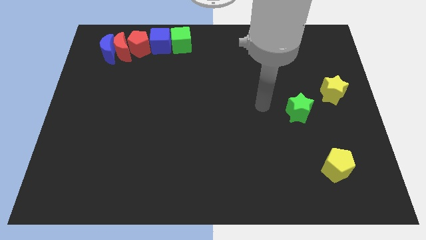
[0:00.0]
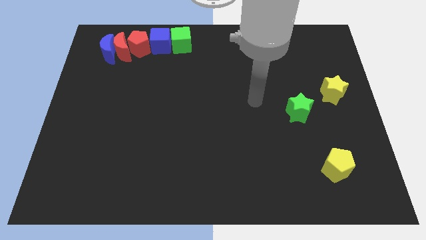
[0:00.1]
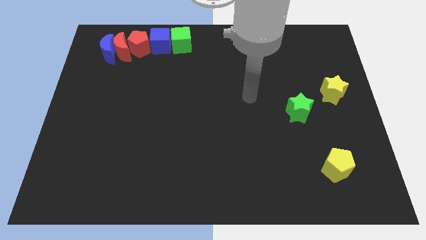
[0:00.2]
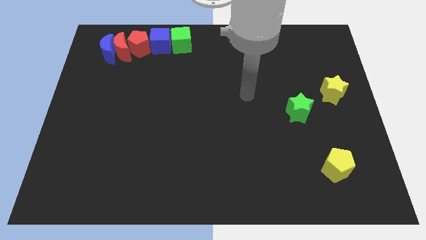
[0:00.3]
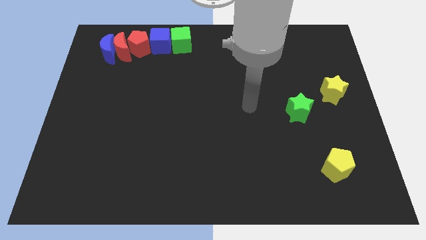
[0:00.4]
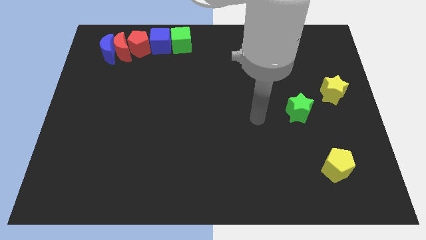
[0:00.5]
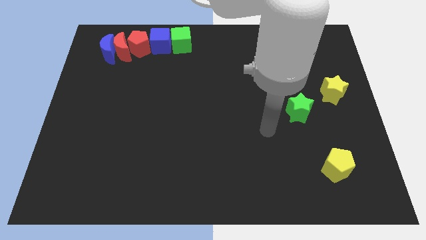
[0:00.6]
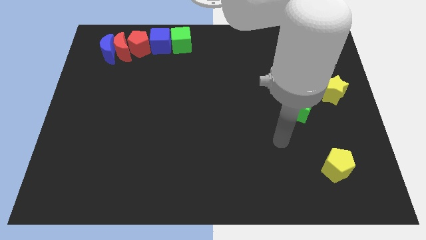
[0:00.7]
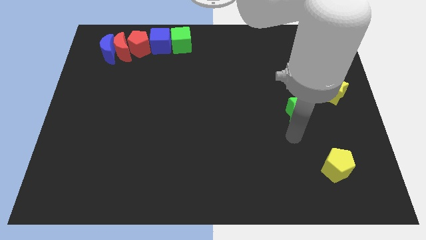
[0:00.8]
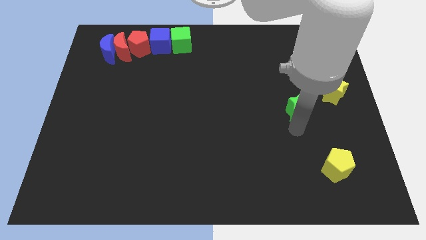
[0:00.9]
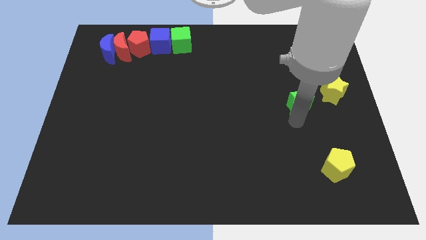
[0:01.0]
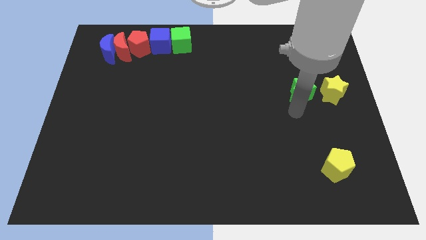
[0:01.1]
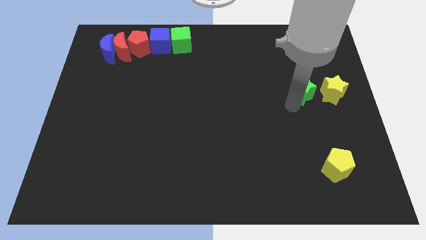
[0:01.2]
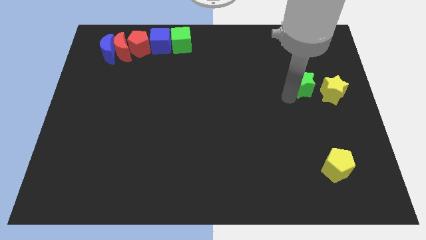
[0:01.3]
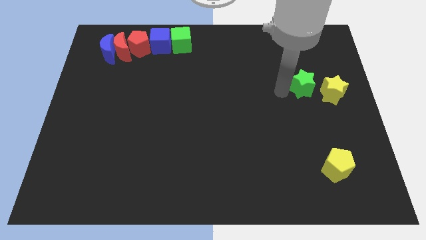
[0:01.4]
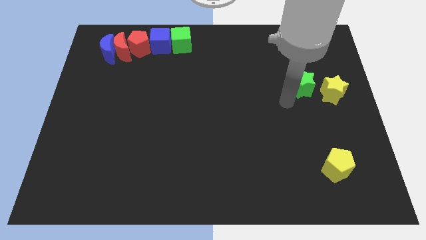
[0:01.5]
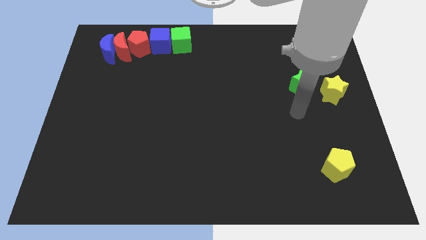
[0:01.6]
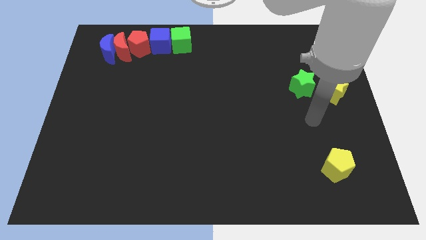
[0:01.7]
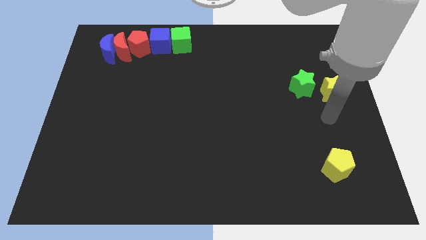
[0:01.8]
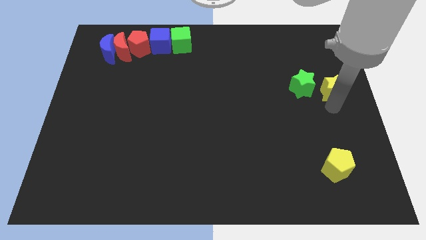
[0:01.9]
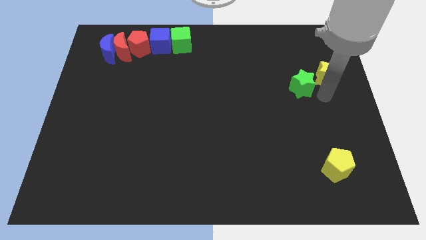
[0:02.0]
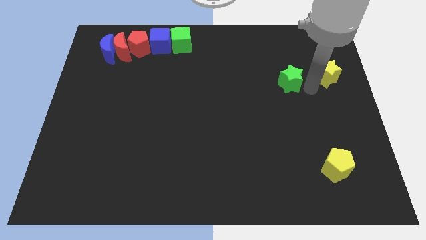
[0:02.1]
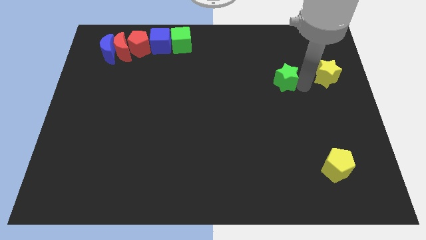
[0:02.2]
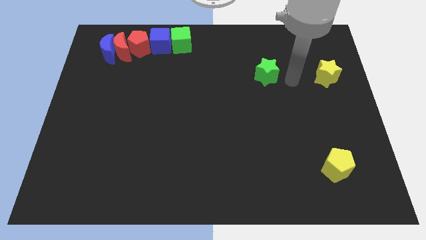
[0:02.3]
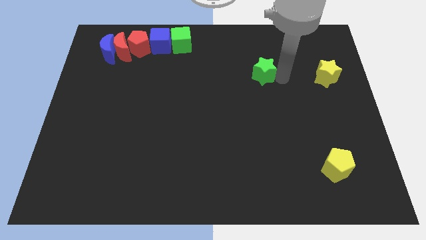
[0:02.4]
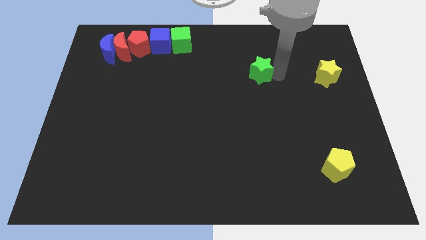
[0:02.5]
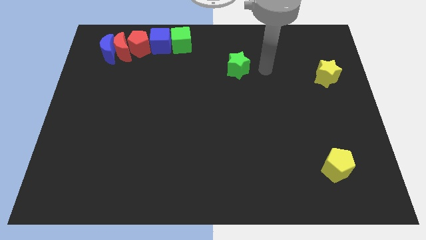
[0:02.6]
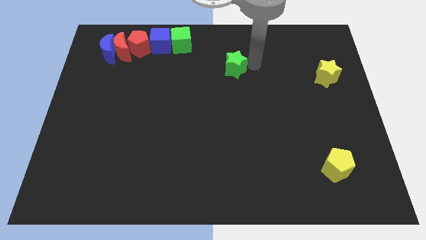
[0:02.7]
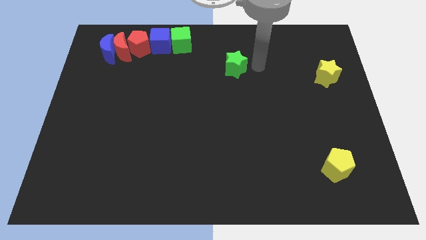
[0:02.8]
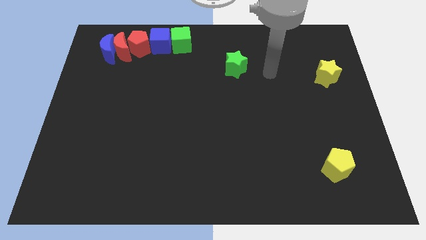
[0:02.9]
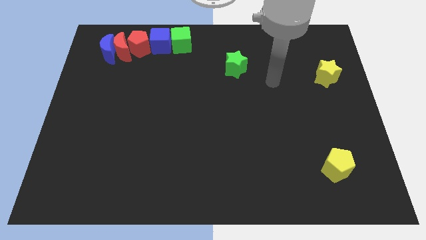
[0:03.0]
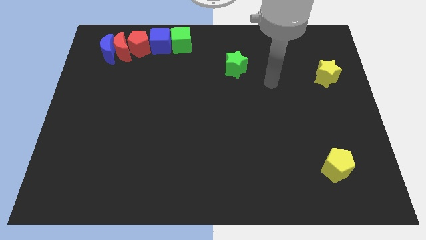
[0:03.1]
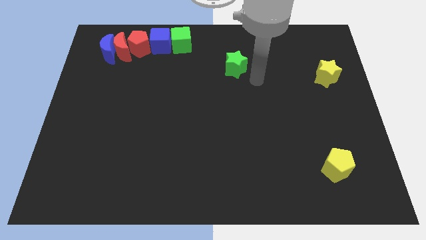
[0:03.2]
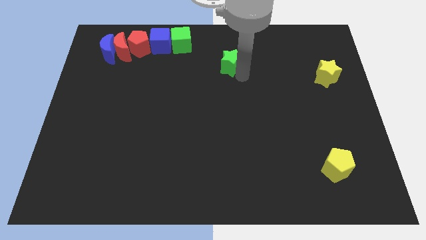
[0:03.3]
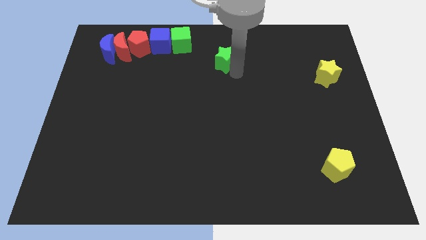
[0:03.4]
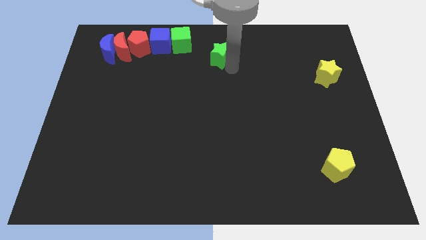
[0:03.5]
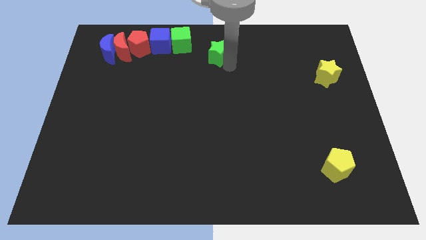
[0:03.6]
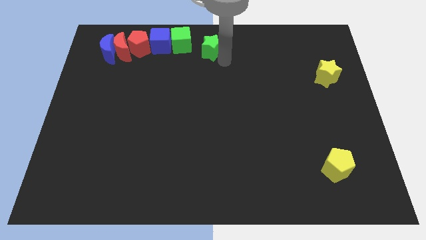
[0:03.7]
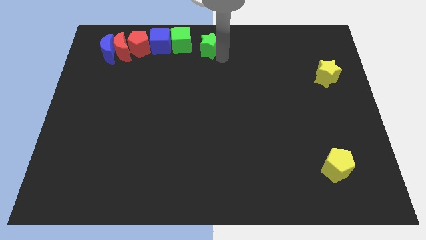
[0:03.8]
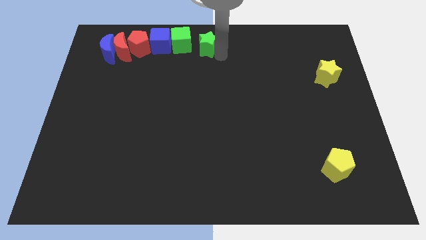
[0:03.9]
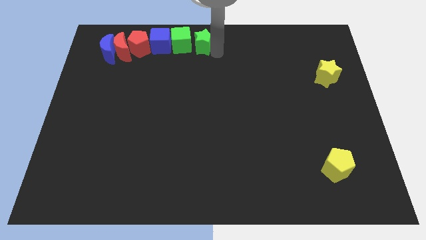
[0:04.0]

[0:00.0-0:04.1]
add green star into green cube

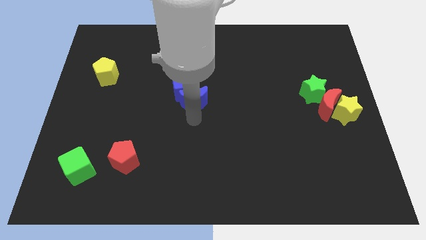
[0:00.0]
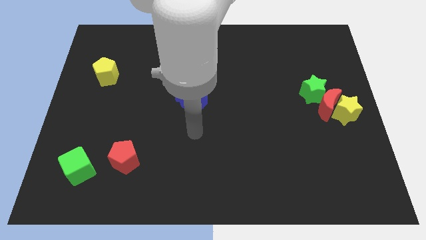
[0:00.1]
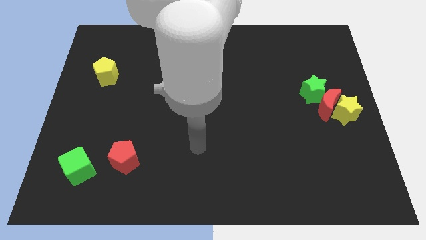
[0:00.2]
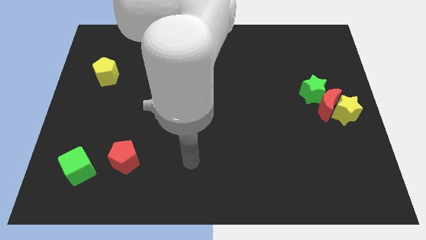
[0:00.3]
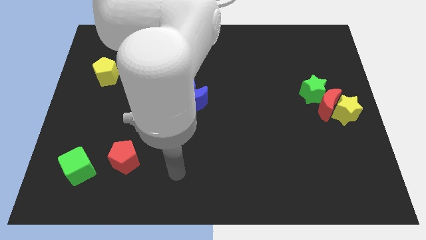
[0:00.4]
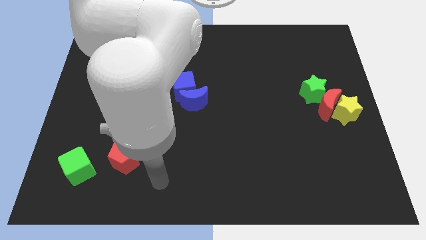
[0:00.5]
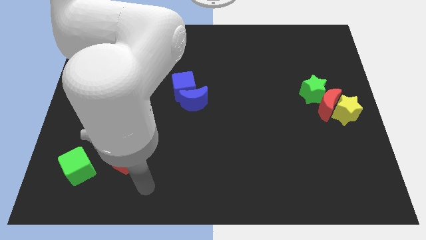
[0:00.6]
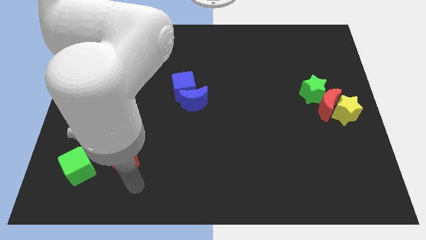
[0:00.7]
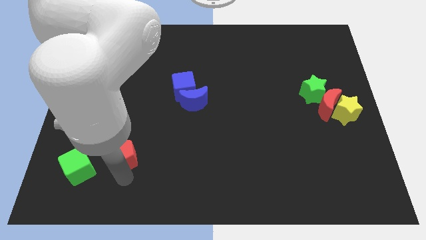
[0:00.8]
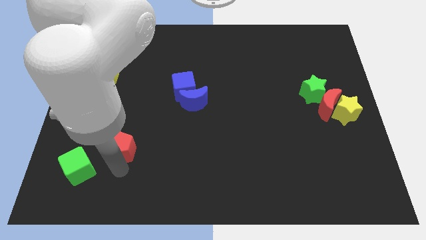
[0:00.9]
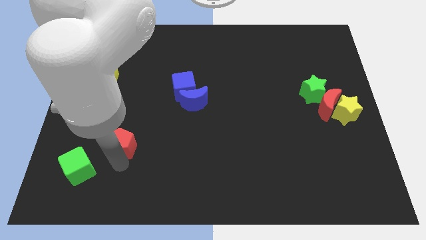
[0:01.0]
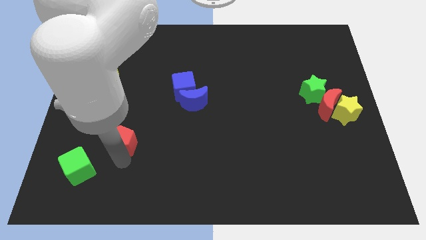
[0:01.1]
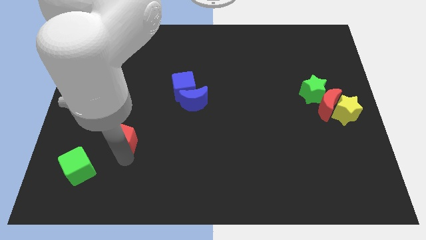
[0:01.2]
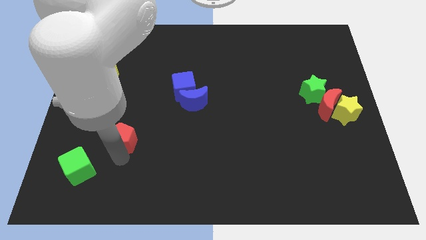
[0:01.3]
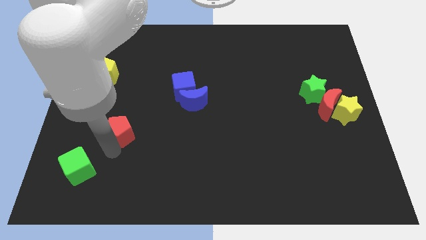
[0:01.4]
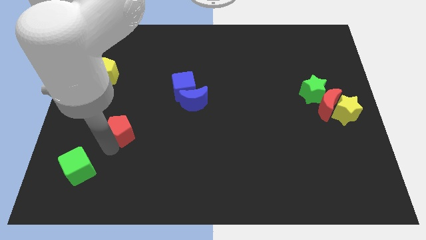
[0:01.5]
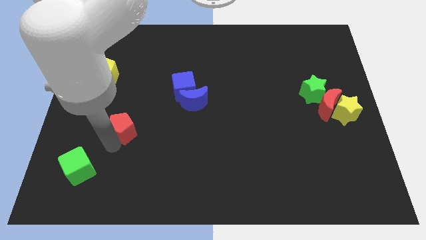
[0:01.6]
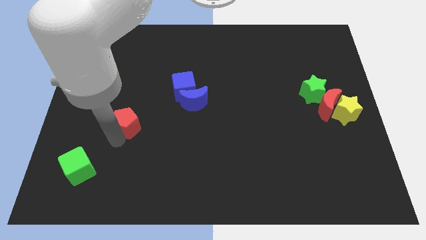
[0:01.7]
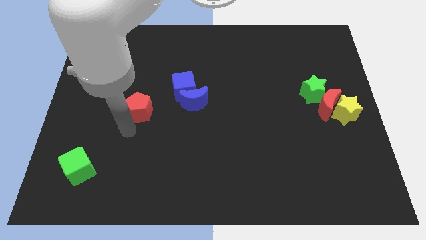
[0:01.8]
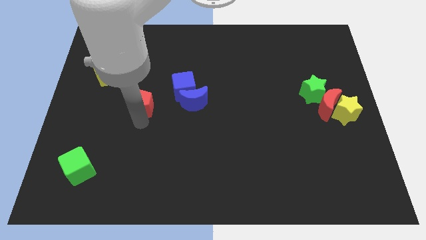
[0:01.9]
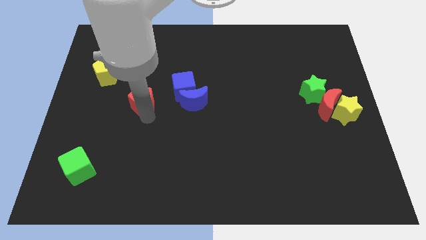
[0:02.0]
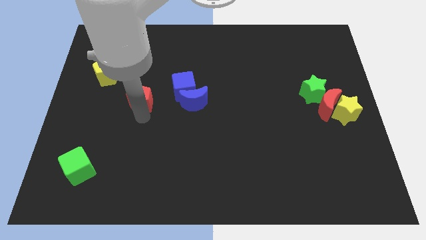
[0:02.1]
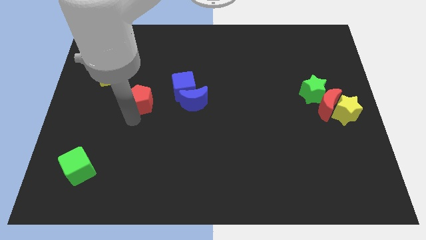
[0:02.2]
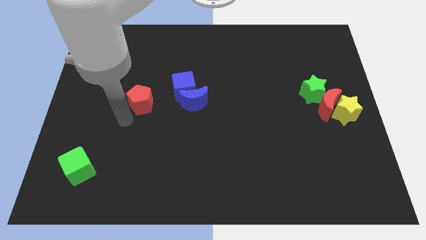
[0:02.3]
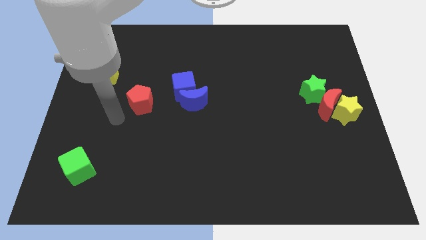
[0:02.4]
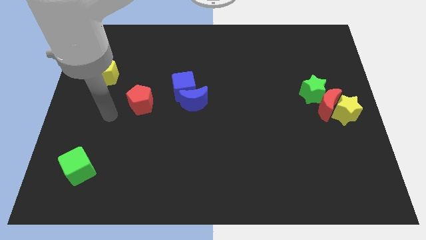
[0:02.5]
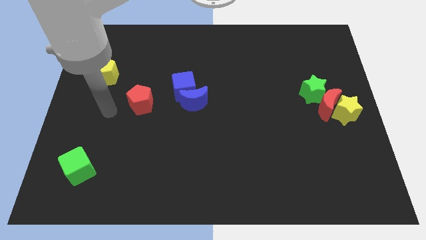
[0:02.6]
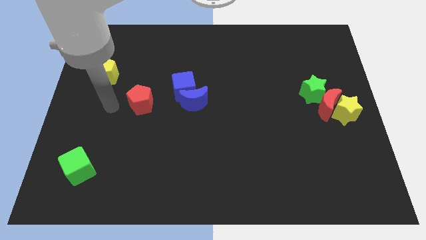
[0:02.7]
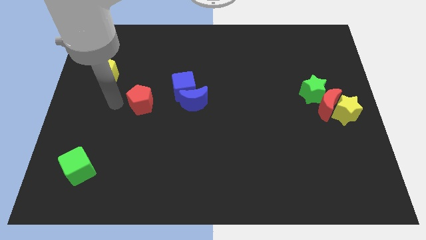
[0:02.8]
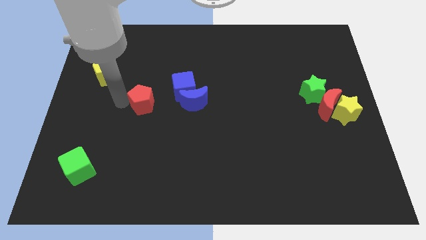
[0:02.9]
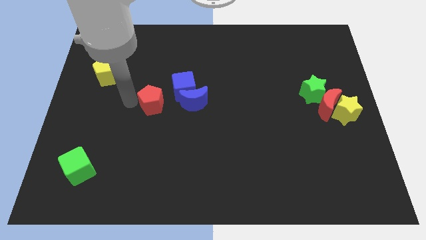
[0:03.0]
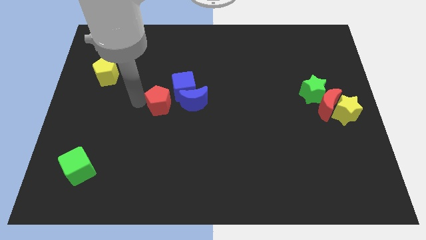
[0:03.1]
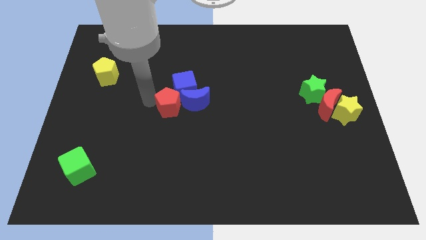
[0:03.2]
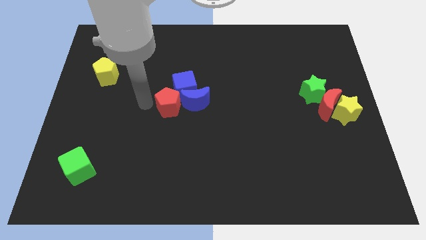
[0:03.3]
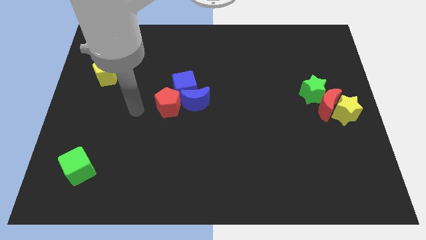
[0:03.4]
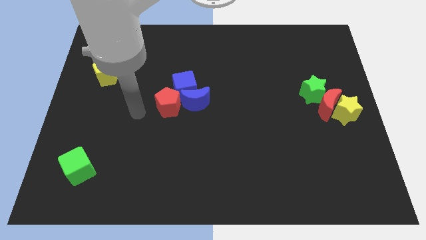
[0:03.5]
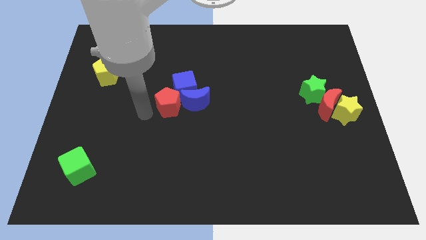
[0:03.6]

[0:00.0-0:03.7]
slide the red pentagon into the left side of the blue blocks

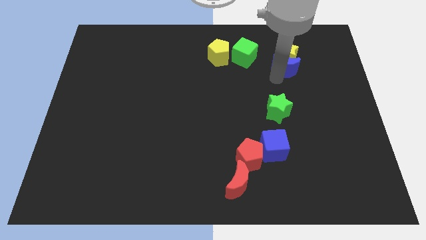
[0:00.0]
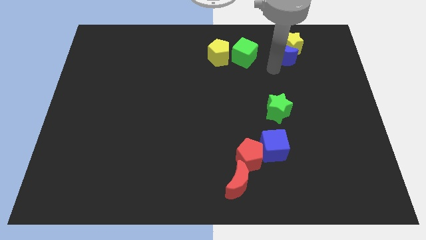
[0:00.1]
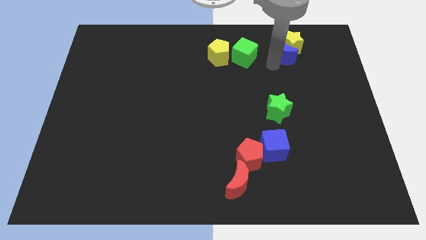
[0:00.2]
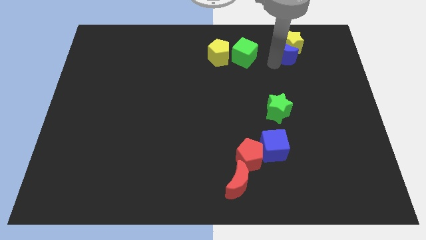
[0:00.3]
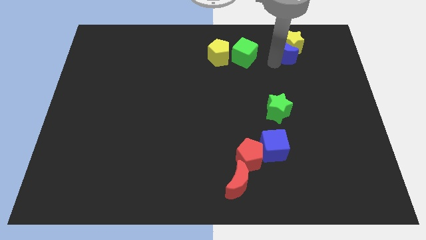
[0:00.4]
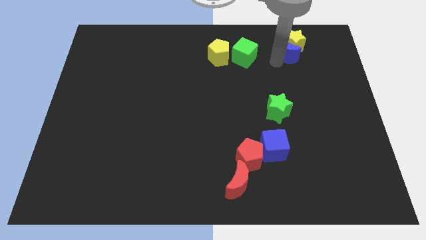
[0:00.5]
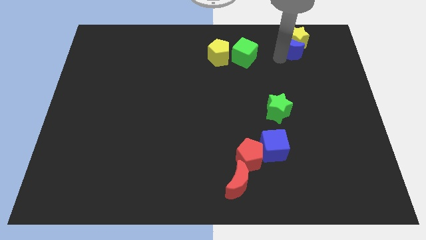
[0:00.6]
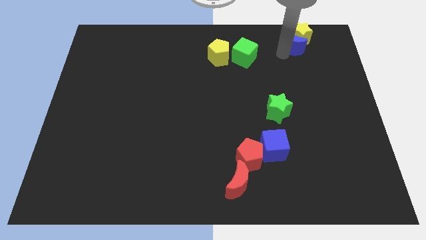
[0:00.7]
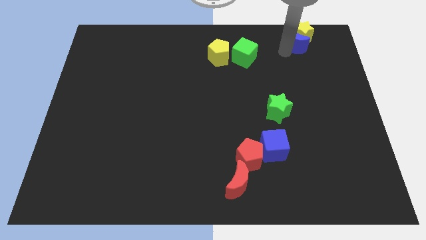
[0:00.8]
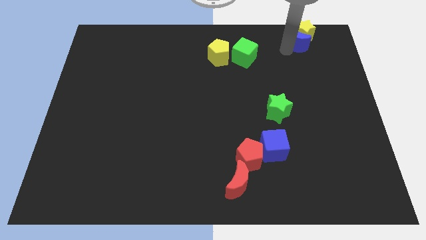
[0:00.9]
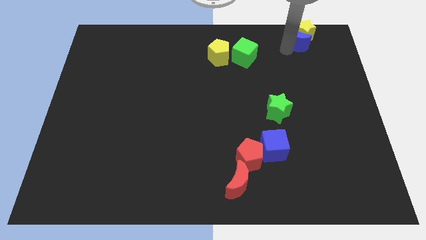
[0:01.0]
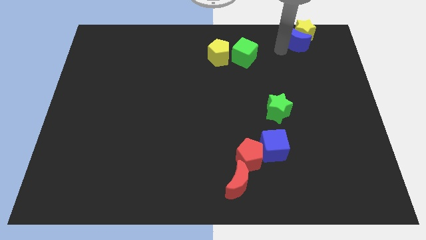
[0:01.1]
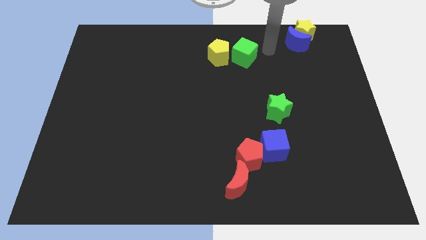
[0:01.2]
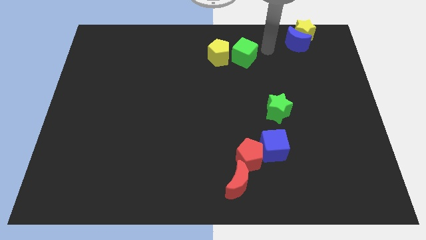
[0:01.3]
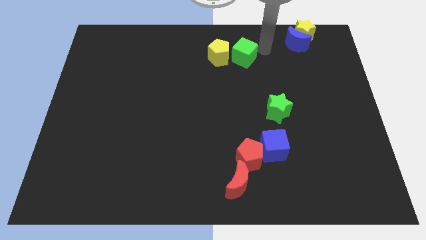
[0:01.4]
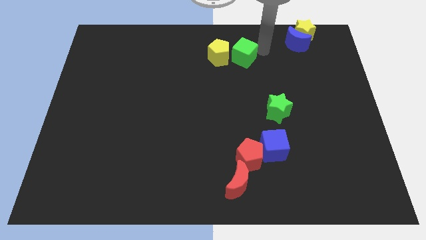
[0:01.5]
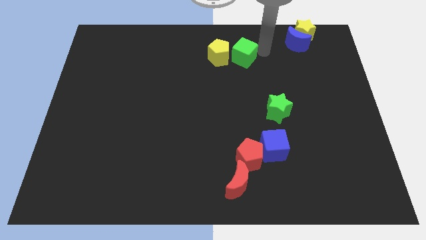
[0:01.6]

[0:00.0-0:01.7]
place the blue moon and yellow star at the top right corner of the board
